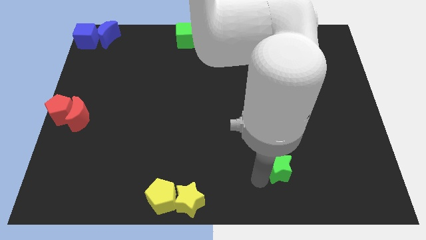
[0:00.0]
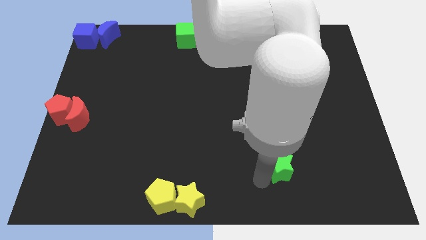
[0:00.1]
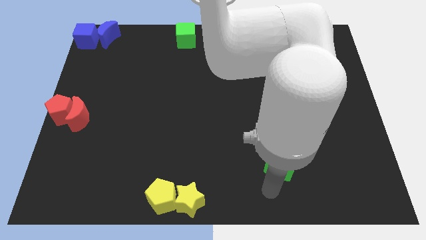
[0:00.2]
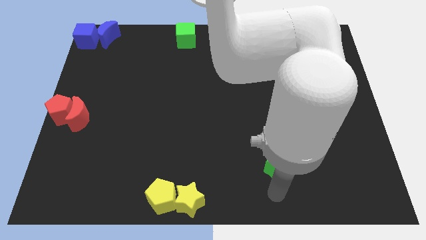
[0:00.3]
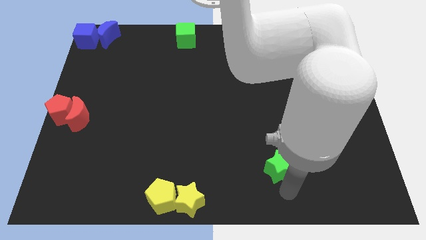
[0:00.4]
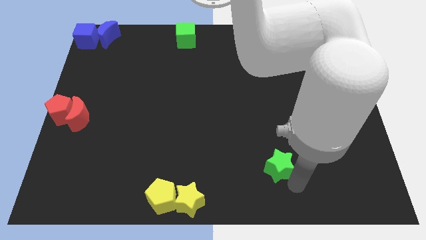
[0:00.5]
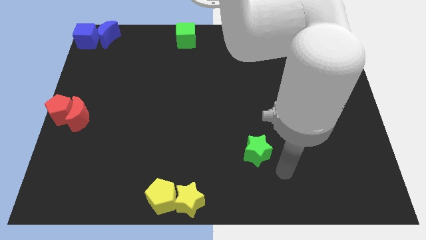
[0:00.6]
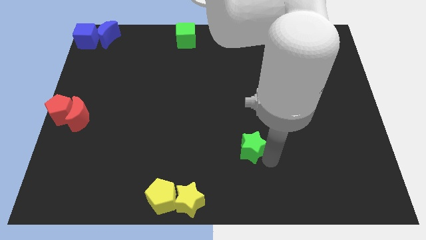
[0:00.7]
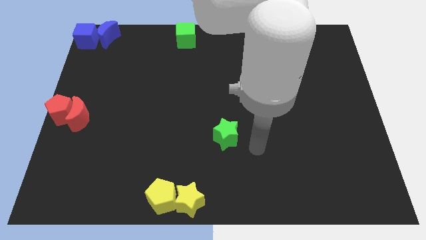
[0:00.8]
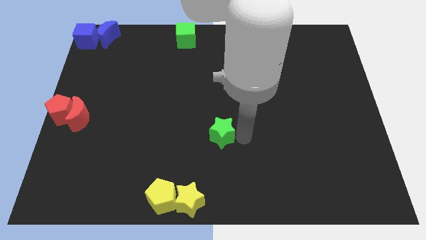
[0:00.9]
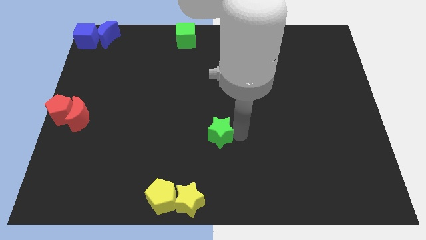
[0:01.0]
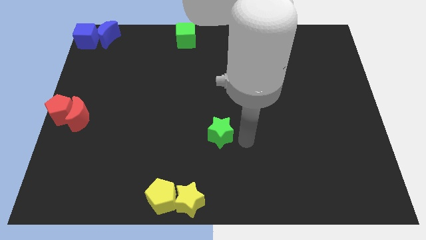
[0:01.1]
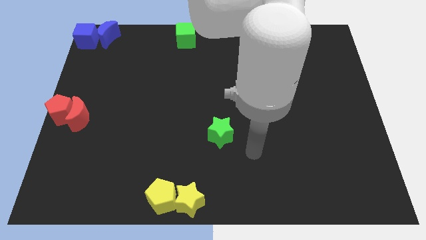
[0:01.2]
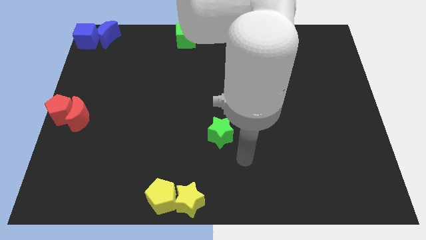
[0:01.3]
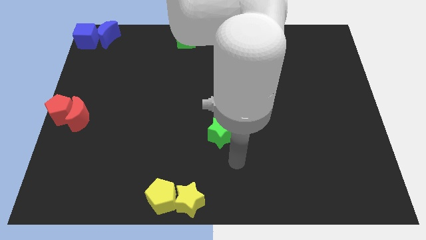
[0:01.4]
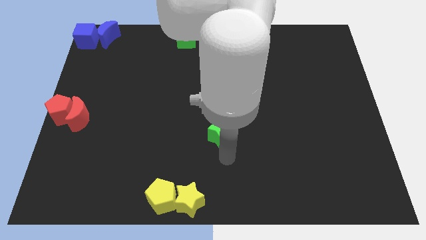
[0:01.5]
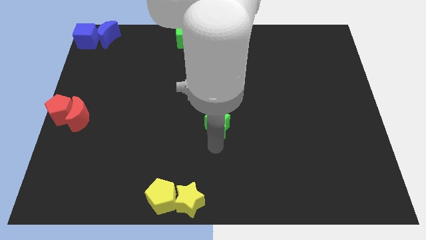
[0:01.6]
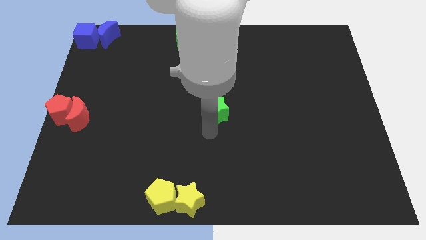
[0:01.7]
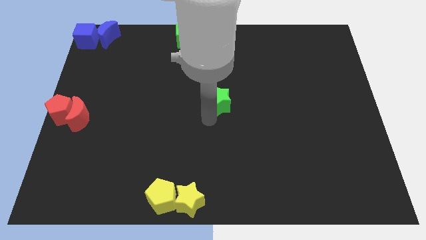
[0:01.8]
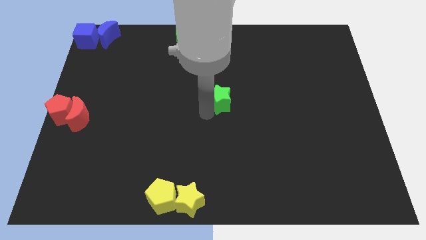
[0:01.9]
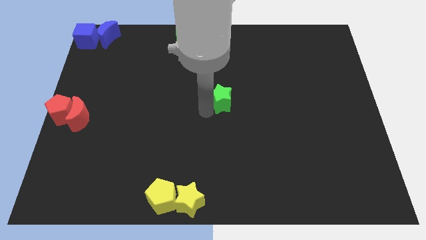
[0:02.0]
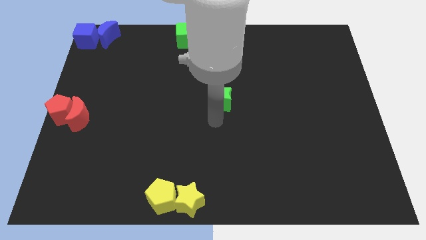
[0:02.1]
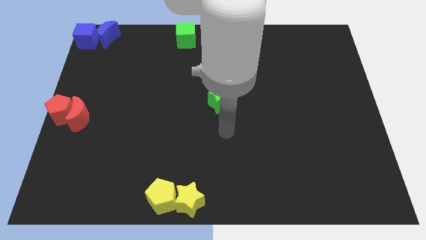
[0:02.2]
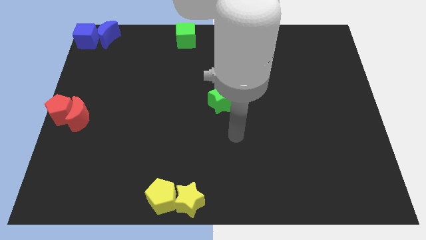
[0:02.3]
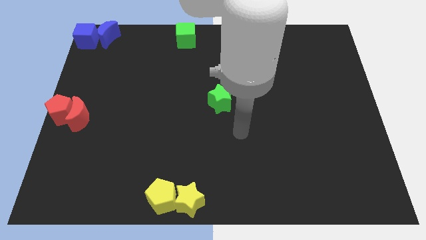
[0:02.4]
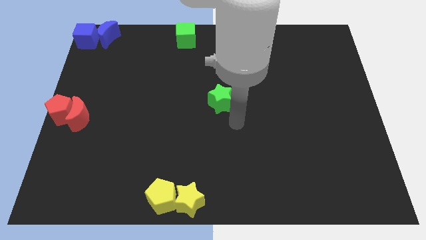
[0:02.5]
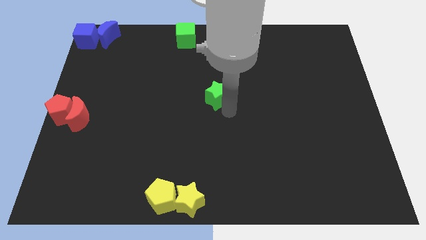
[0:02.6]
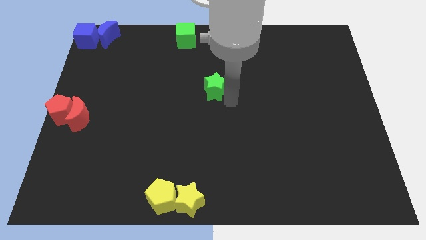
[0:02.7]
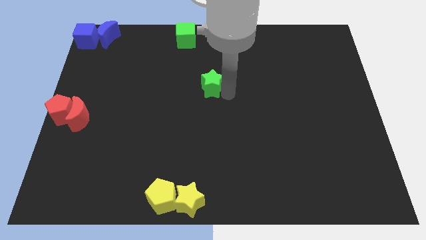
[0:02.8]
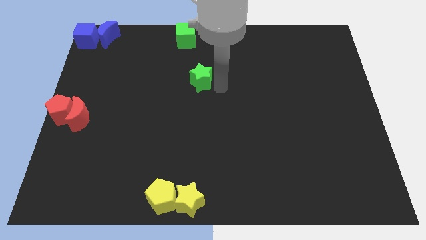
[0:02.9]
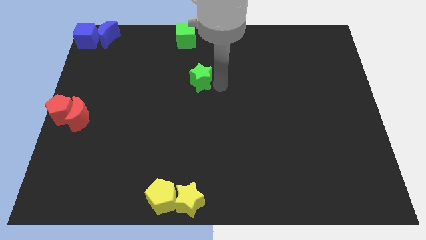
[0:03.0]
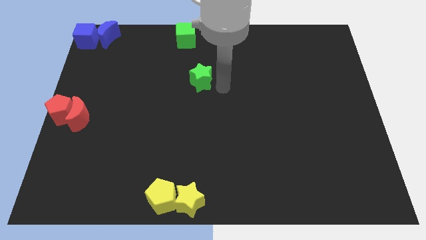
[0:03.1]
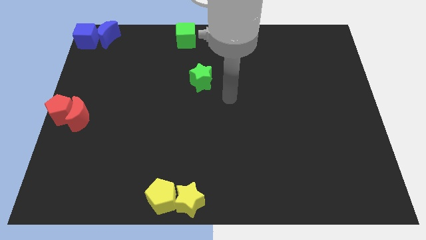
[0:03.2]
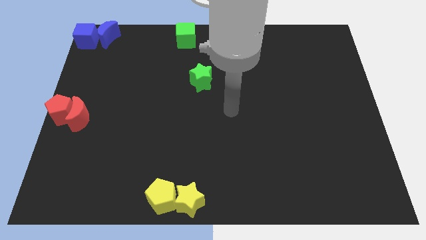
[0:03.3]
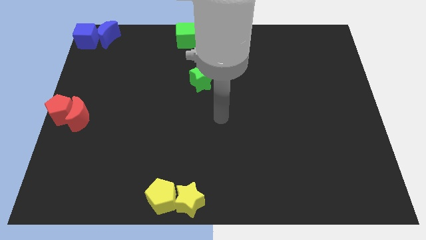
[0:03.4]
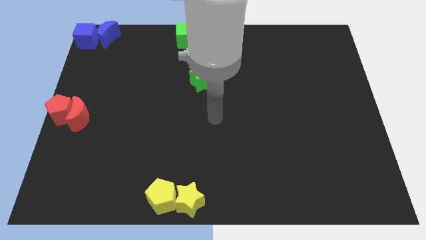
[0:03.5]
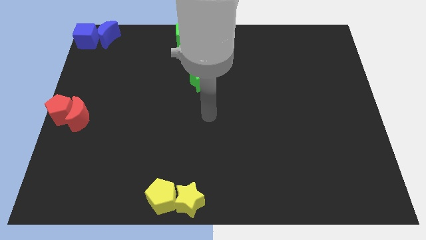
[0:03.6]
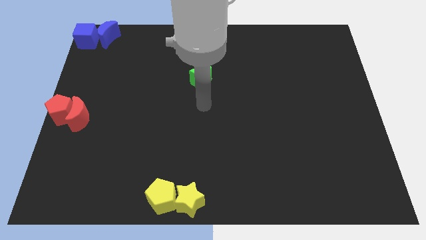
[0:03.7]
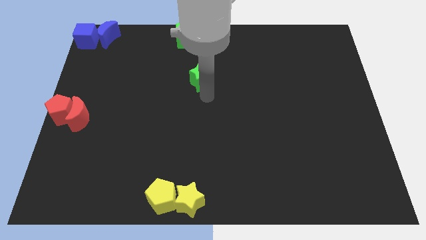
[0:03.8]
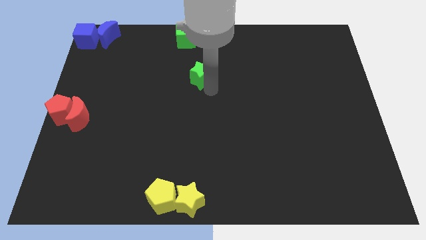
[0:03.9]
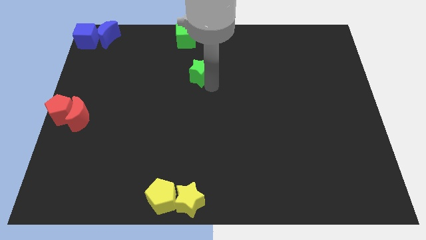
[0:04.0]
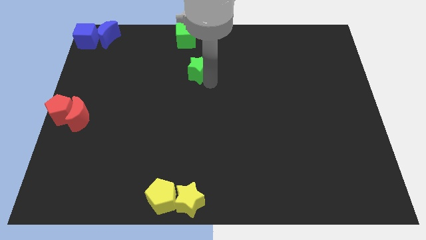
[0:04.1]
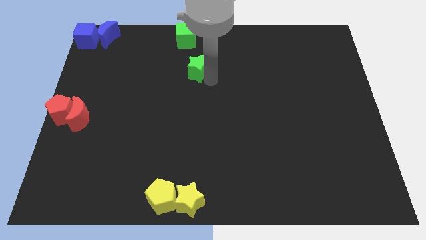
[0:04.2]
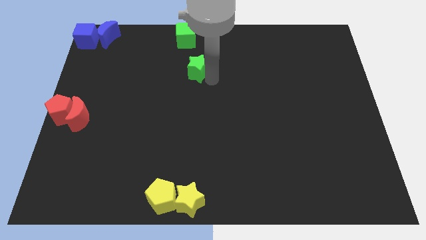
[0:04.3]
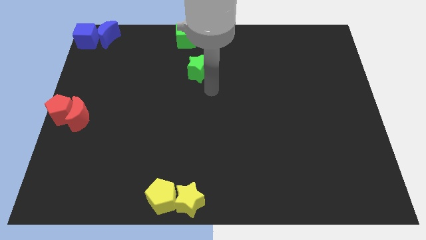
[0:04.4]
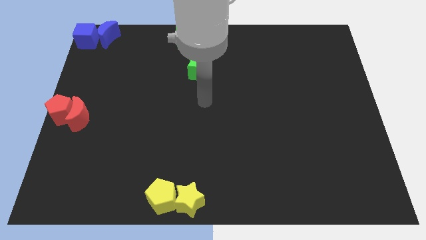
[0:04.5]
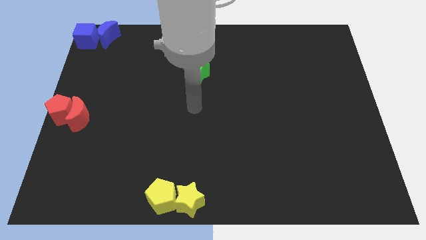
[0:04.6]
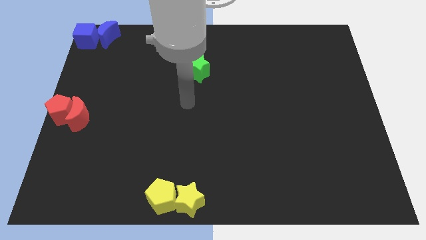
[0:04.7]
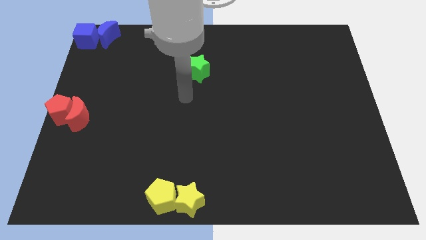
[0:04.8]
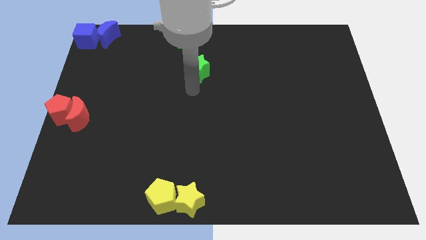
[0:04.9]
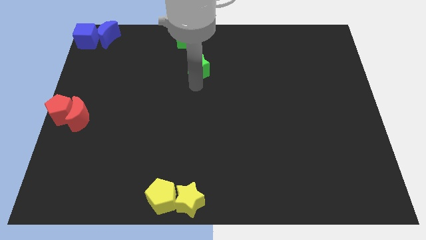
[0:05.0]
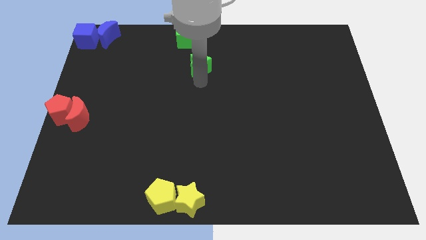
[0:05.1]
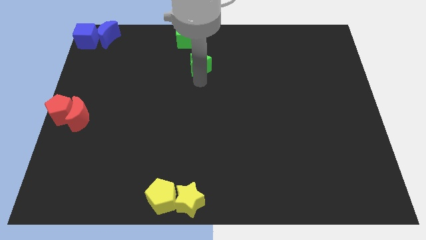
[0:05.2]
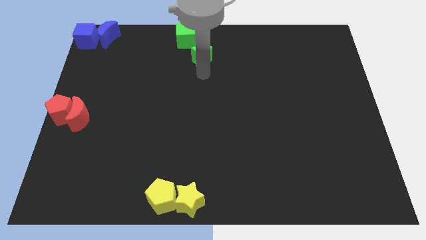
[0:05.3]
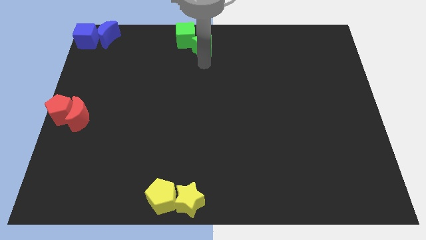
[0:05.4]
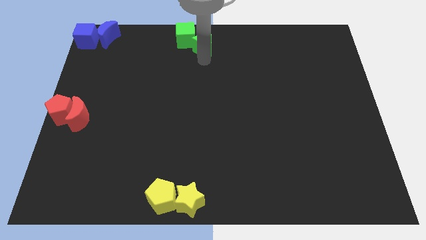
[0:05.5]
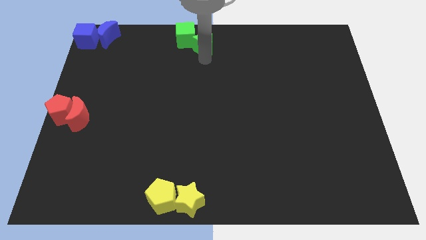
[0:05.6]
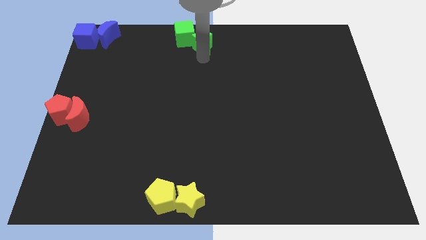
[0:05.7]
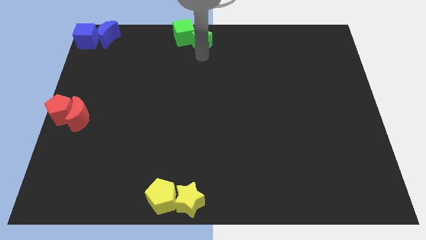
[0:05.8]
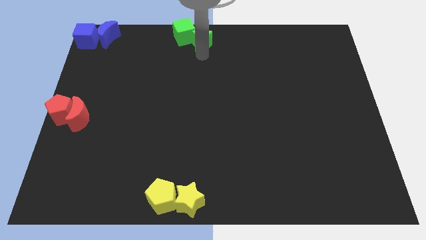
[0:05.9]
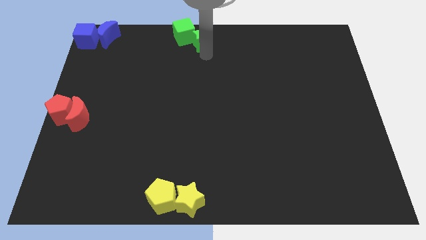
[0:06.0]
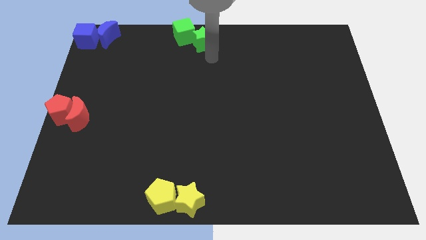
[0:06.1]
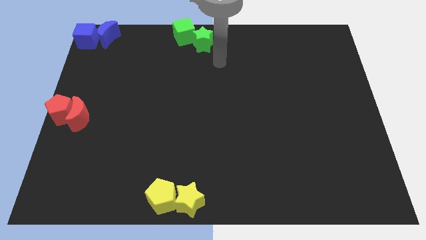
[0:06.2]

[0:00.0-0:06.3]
put the green star at the top center

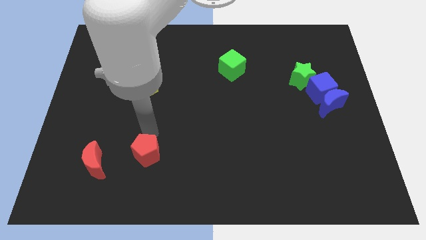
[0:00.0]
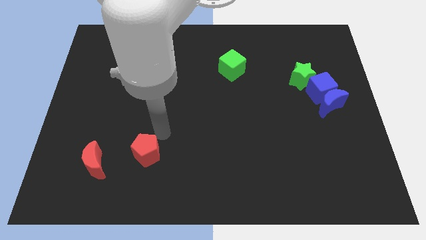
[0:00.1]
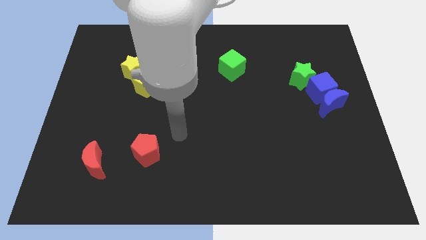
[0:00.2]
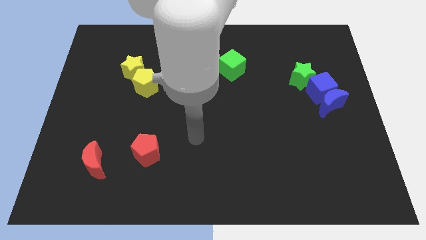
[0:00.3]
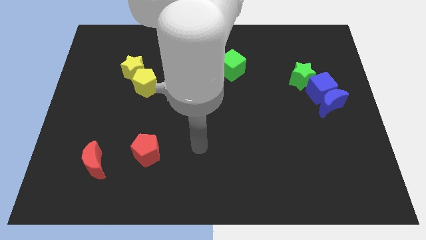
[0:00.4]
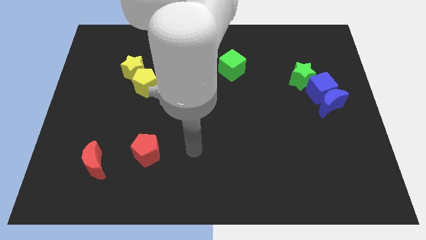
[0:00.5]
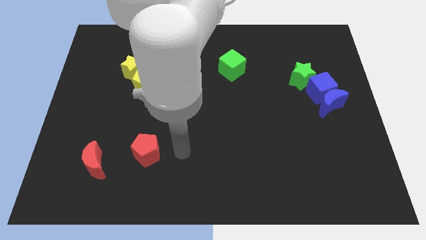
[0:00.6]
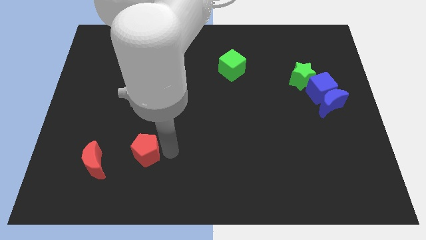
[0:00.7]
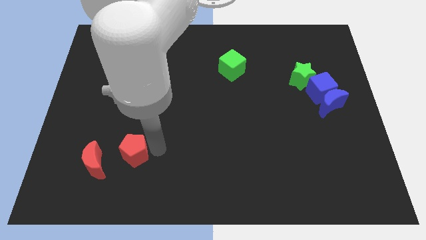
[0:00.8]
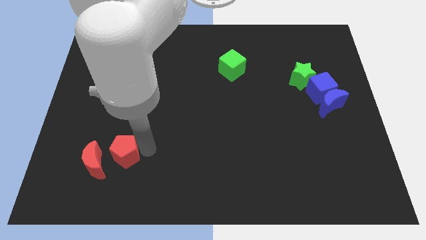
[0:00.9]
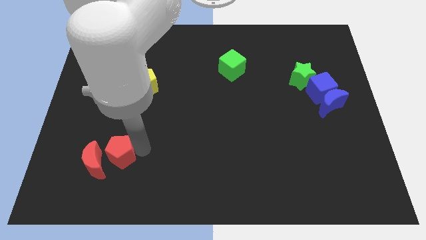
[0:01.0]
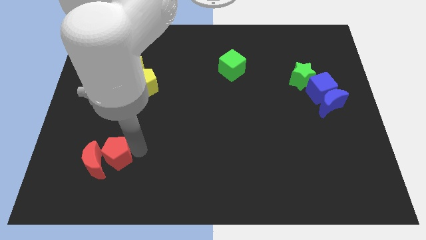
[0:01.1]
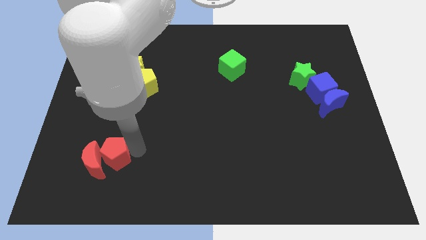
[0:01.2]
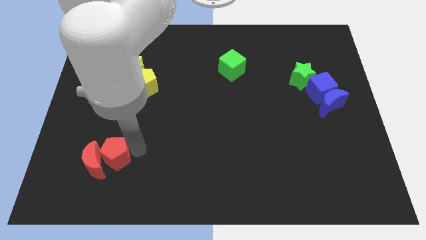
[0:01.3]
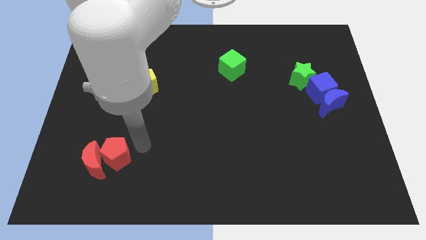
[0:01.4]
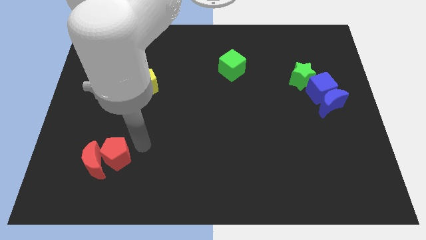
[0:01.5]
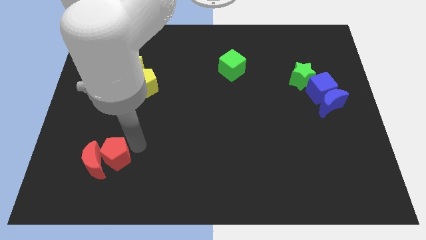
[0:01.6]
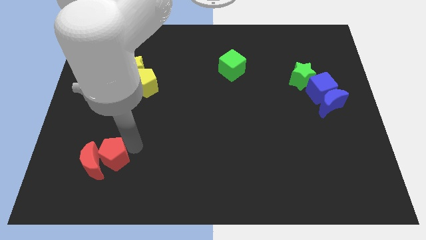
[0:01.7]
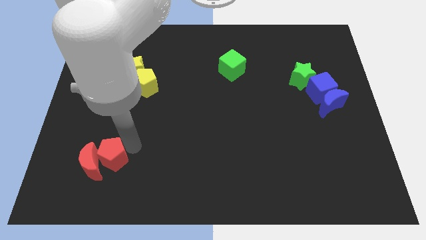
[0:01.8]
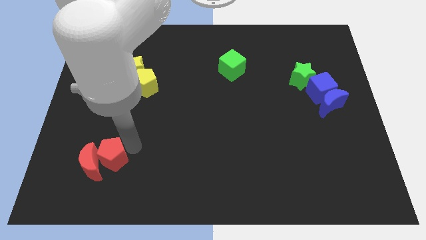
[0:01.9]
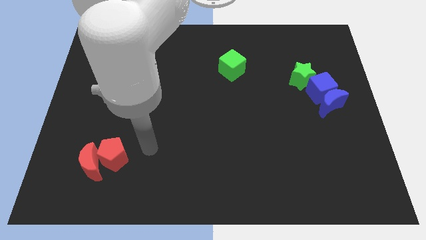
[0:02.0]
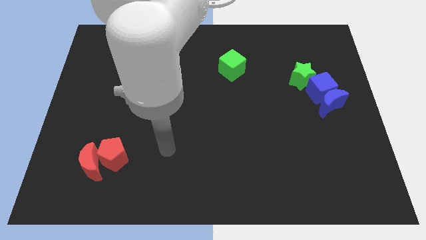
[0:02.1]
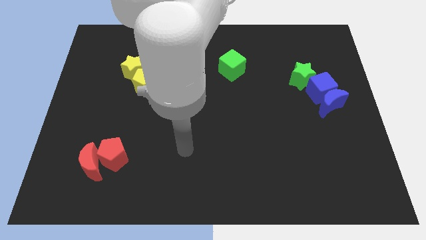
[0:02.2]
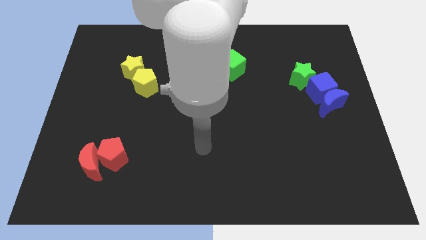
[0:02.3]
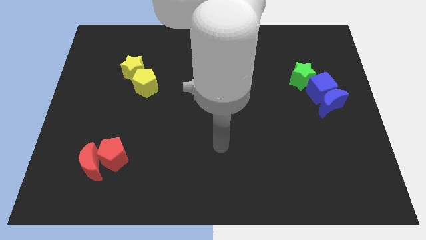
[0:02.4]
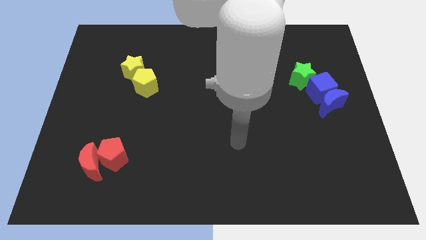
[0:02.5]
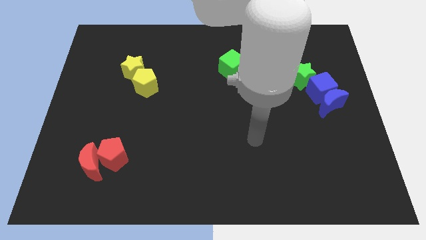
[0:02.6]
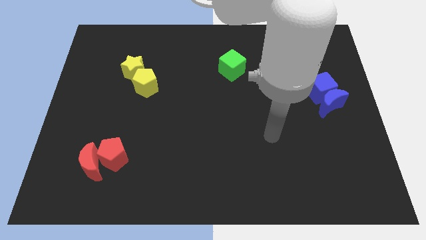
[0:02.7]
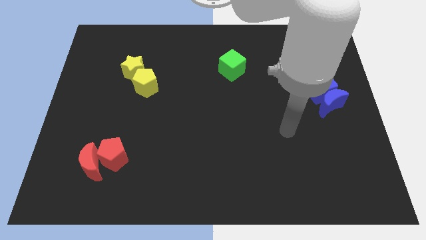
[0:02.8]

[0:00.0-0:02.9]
push the red pentagon into the red crescent
